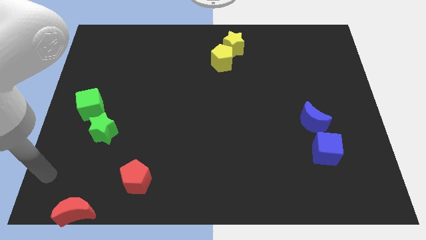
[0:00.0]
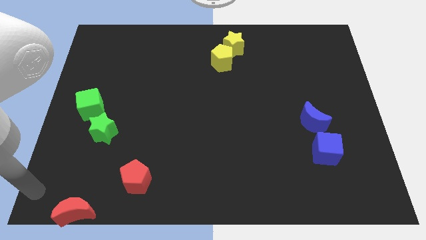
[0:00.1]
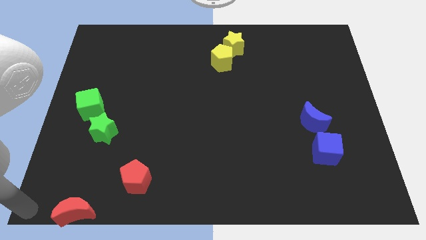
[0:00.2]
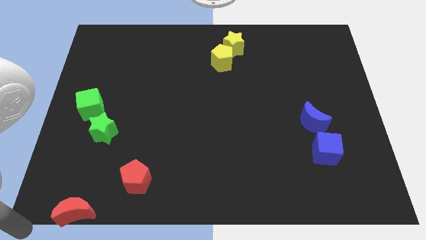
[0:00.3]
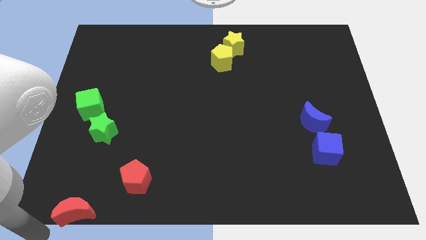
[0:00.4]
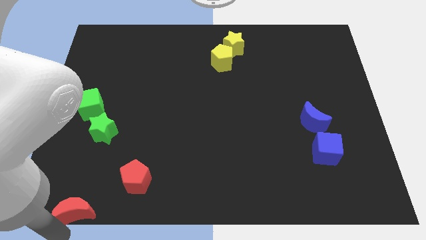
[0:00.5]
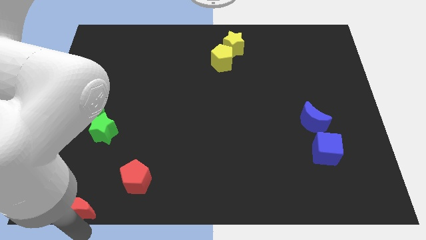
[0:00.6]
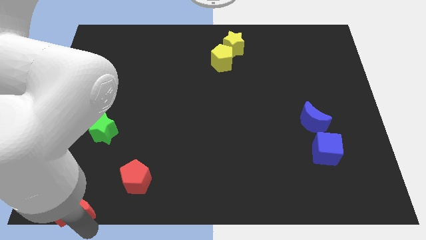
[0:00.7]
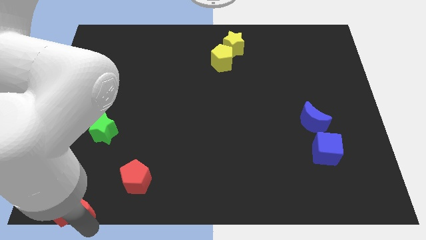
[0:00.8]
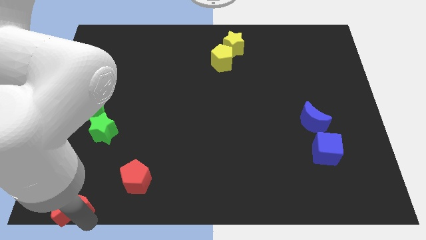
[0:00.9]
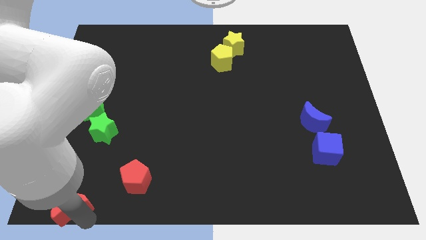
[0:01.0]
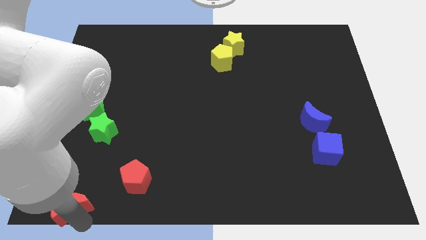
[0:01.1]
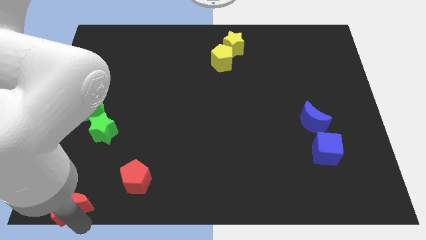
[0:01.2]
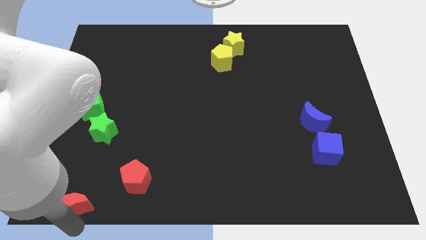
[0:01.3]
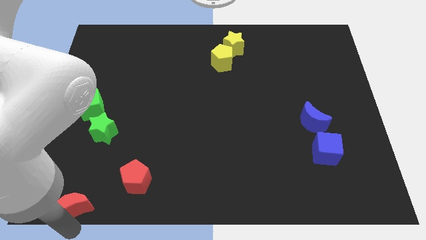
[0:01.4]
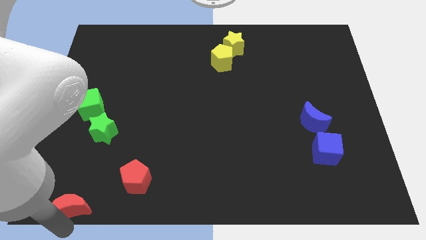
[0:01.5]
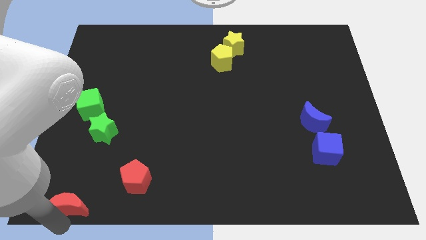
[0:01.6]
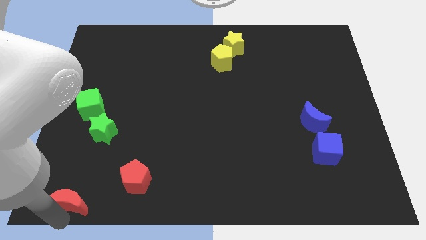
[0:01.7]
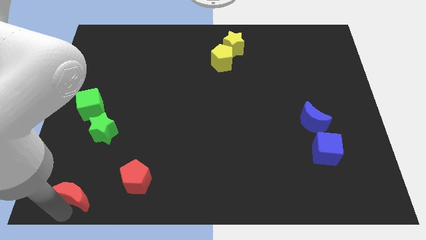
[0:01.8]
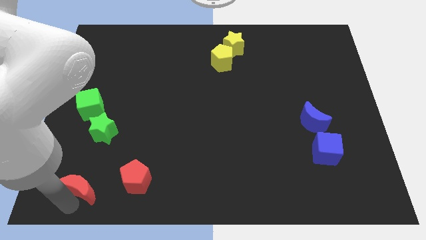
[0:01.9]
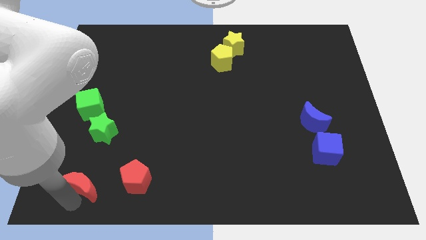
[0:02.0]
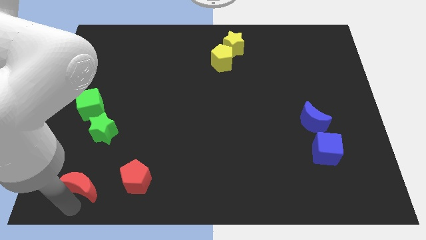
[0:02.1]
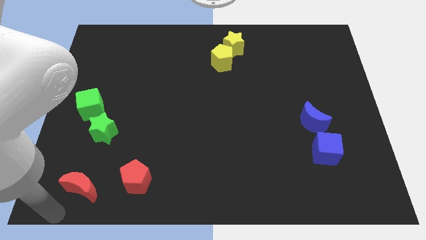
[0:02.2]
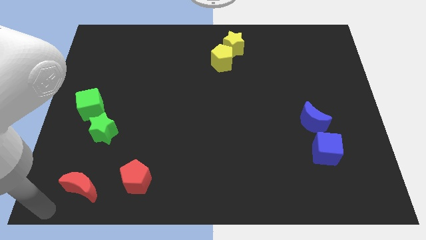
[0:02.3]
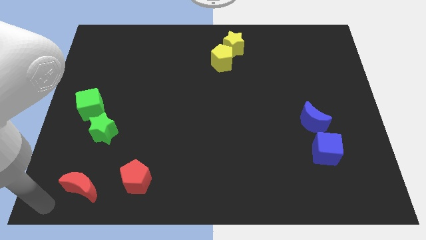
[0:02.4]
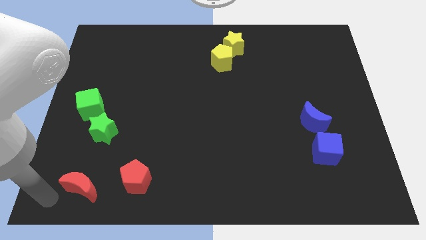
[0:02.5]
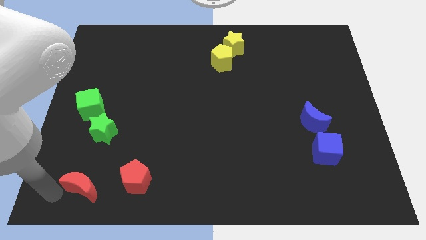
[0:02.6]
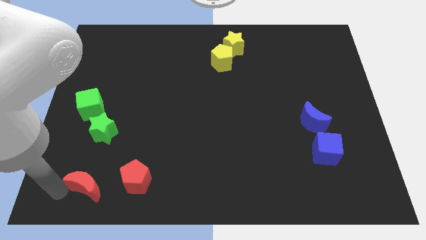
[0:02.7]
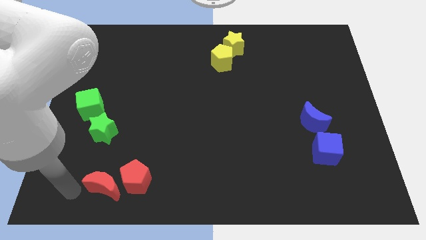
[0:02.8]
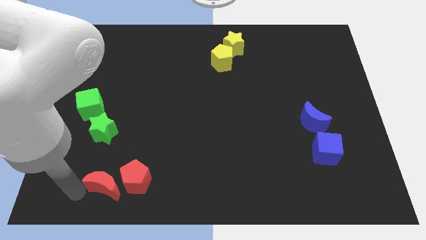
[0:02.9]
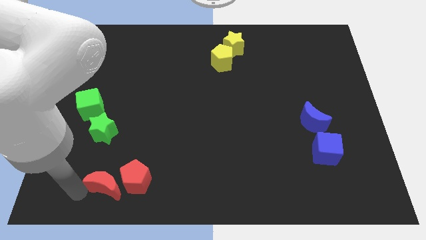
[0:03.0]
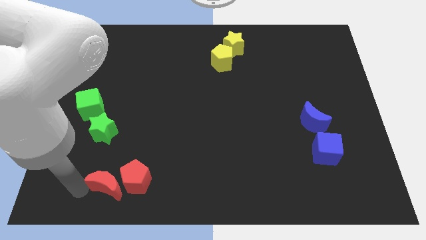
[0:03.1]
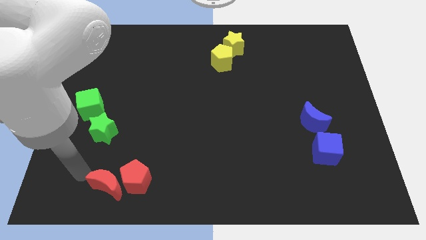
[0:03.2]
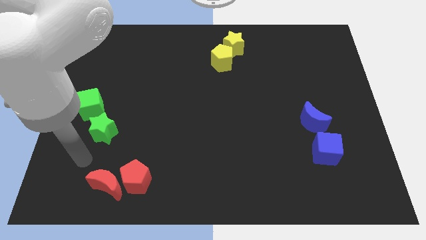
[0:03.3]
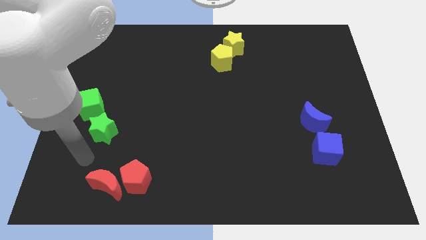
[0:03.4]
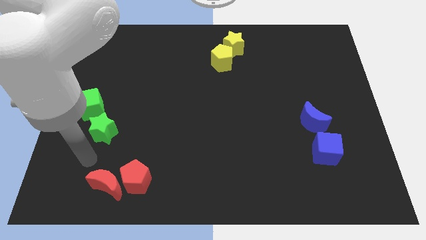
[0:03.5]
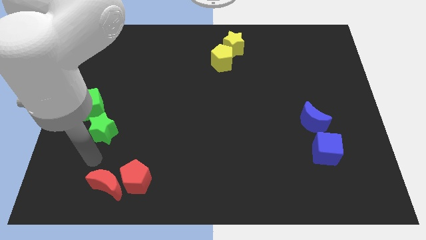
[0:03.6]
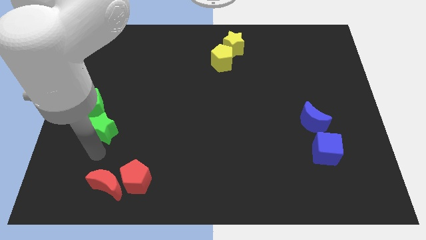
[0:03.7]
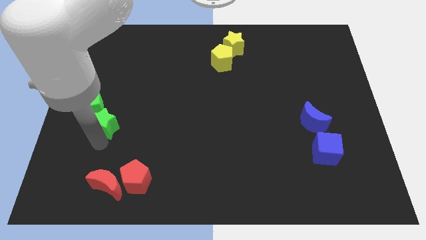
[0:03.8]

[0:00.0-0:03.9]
place the red moon left to the red pentagon

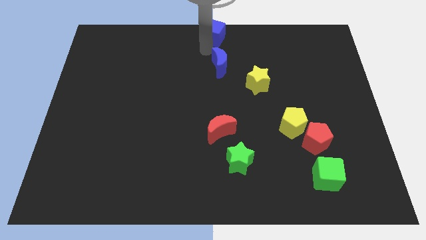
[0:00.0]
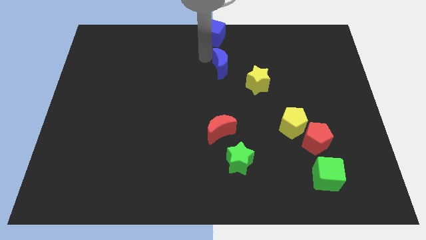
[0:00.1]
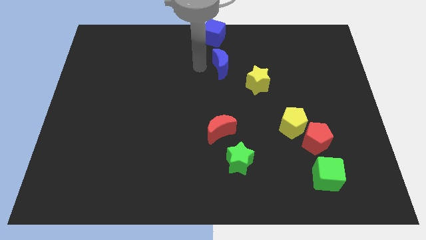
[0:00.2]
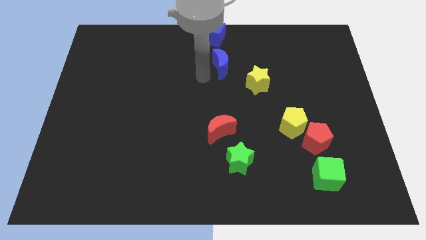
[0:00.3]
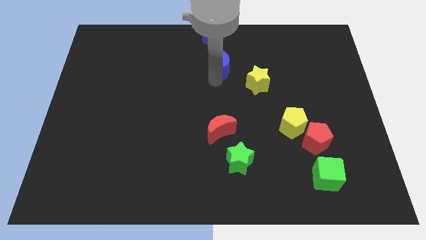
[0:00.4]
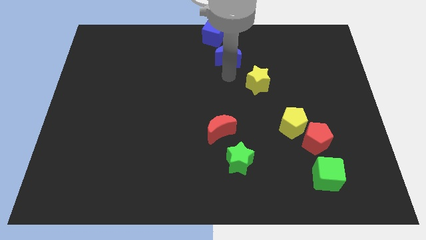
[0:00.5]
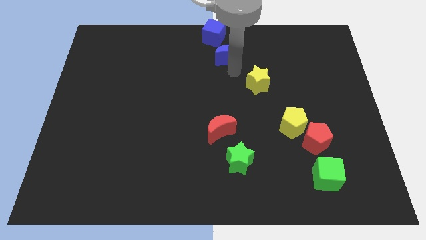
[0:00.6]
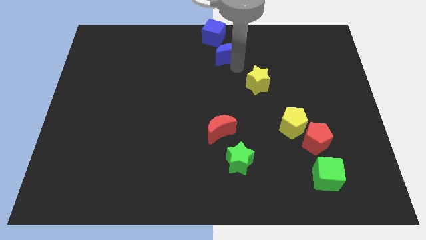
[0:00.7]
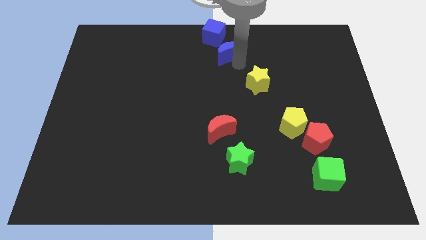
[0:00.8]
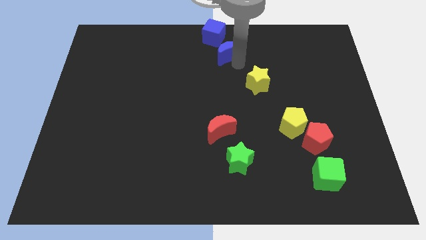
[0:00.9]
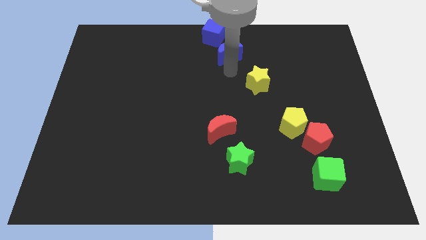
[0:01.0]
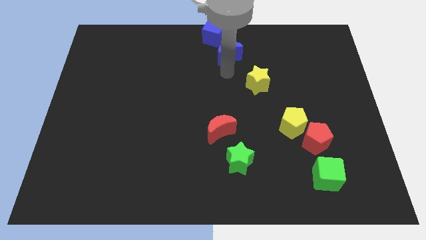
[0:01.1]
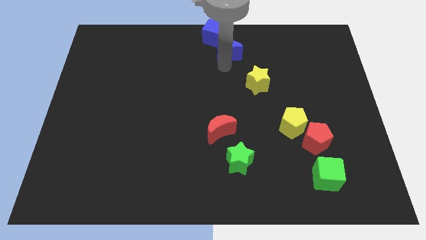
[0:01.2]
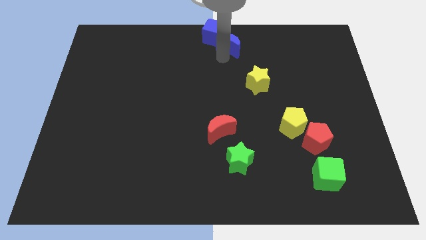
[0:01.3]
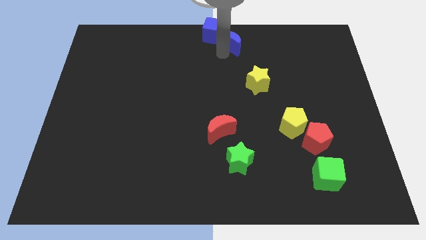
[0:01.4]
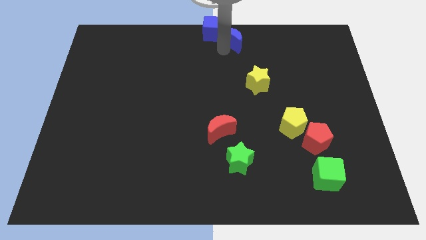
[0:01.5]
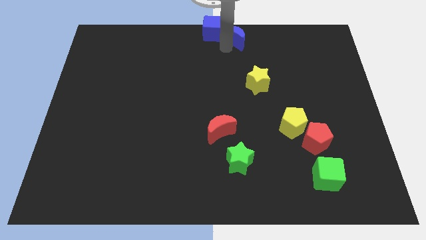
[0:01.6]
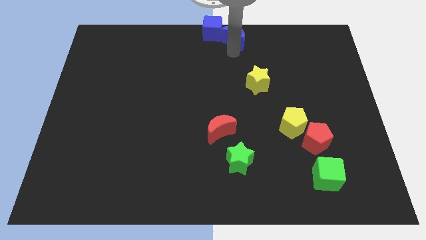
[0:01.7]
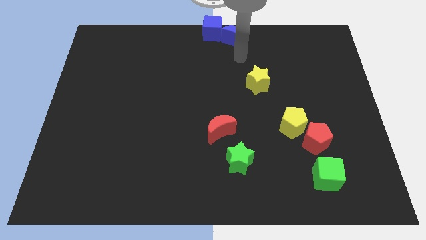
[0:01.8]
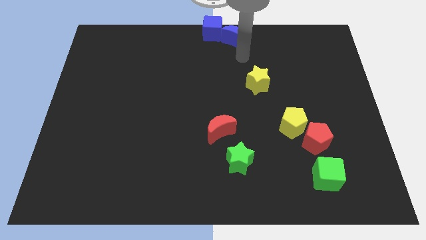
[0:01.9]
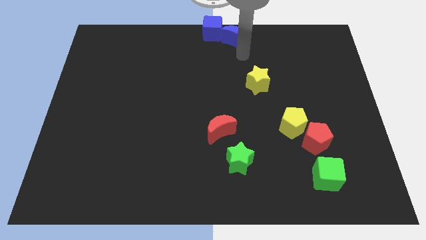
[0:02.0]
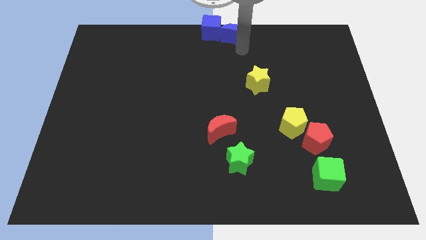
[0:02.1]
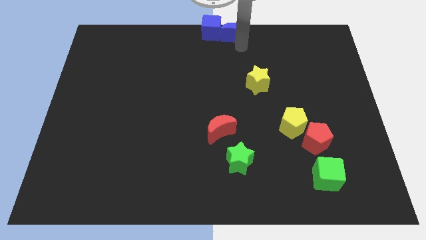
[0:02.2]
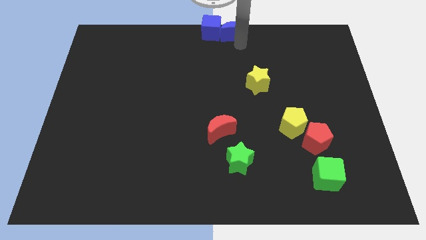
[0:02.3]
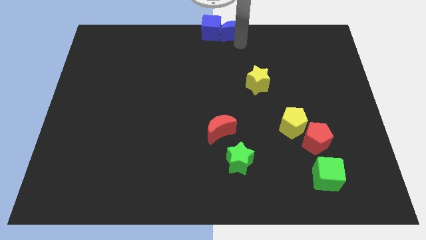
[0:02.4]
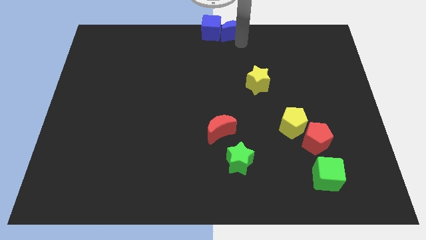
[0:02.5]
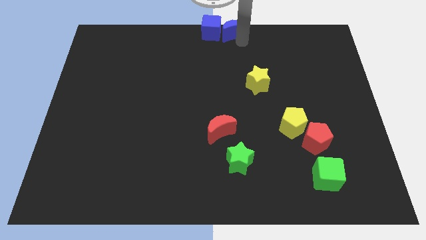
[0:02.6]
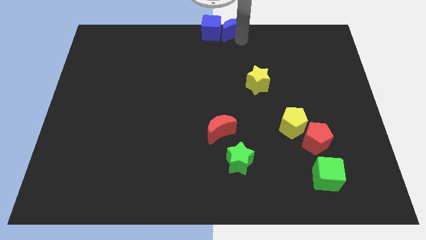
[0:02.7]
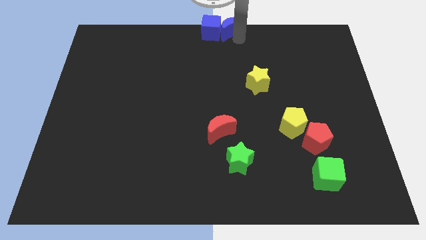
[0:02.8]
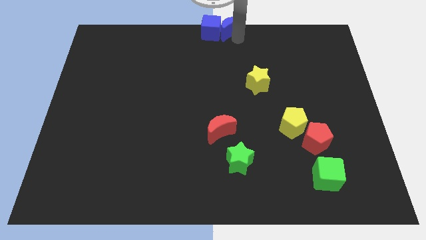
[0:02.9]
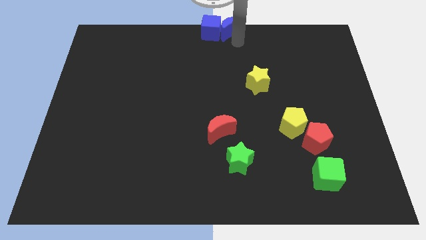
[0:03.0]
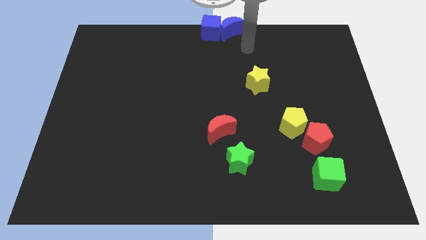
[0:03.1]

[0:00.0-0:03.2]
place the blue moon to the right side of the blue cube

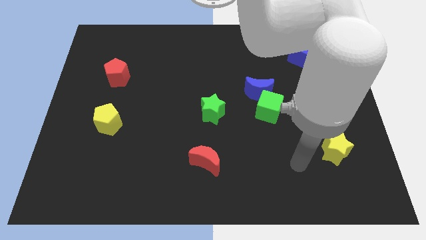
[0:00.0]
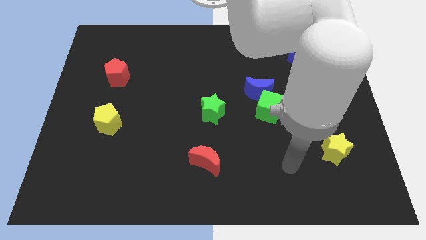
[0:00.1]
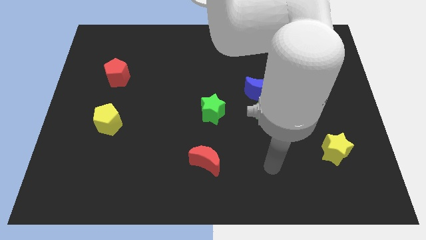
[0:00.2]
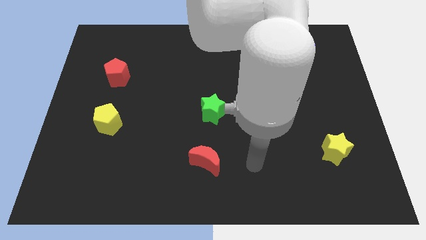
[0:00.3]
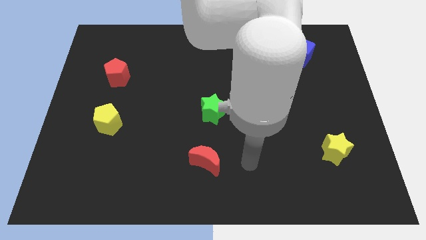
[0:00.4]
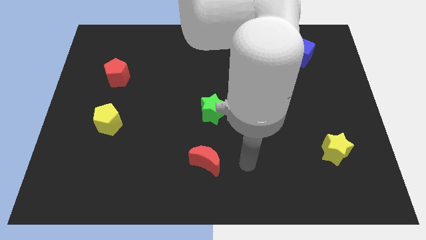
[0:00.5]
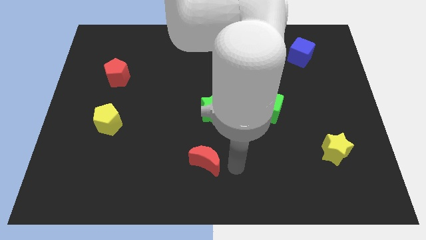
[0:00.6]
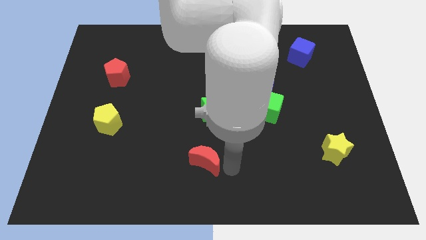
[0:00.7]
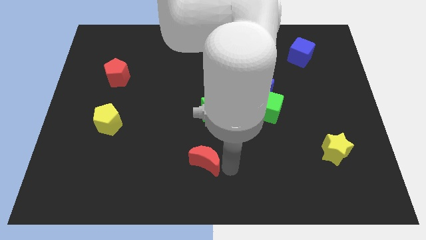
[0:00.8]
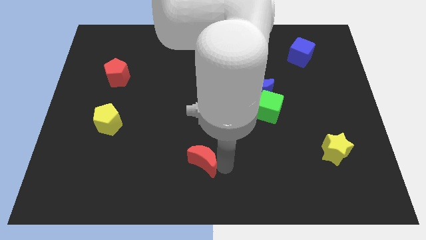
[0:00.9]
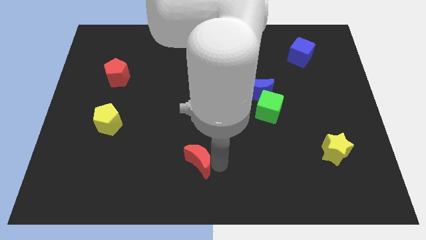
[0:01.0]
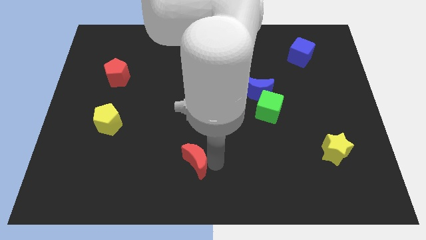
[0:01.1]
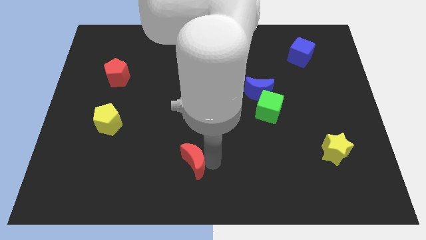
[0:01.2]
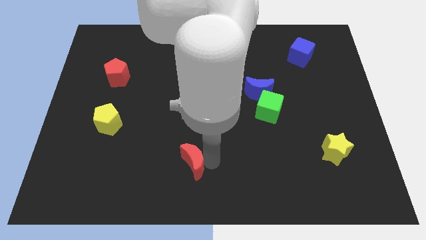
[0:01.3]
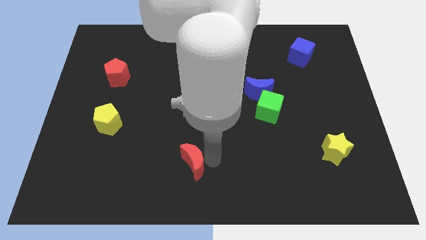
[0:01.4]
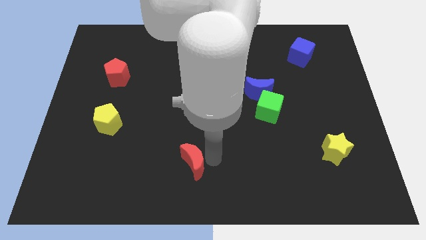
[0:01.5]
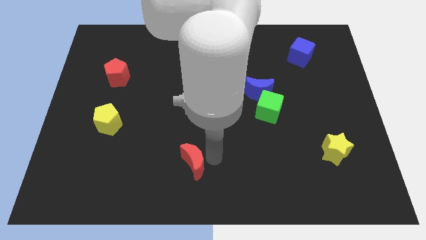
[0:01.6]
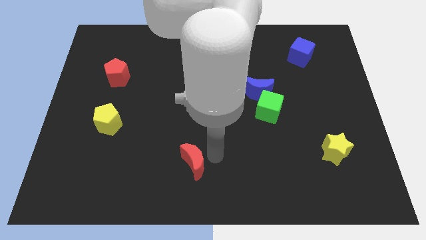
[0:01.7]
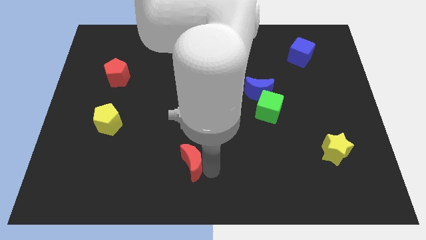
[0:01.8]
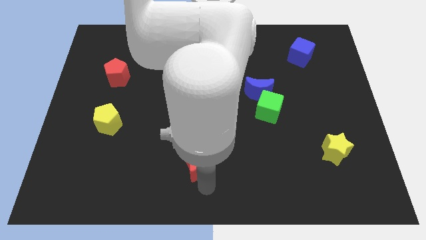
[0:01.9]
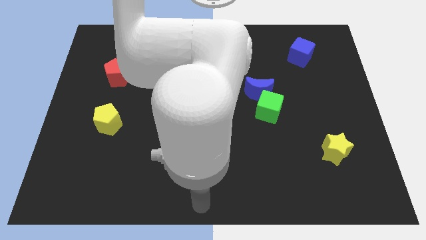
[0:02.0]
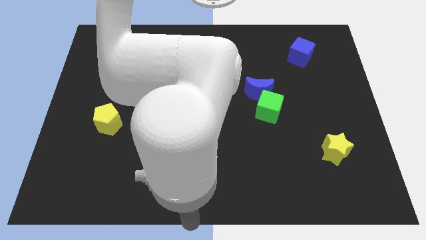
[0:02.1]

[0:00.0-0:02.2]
move the red moon slightly to the left
